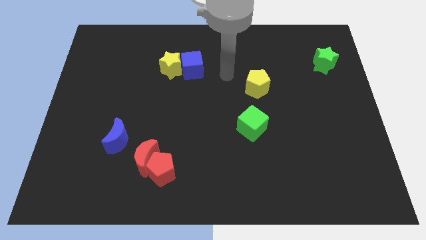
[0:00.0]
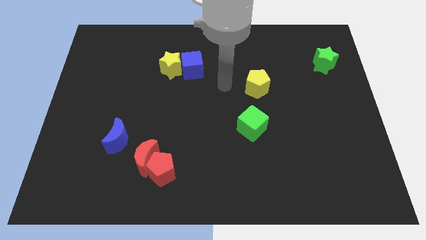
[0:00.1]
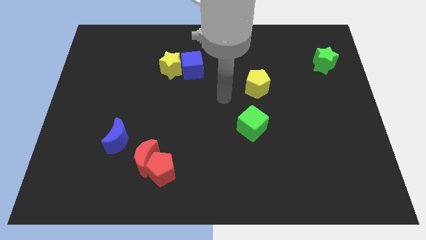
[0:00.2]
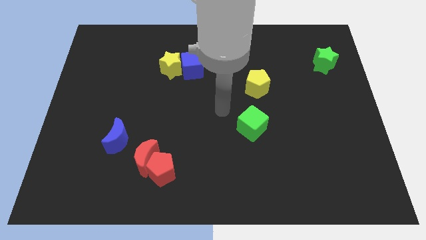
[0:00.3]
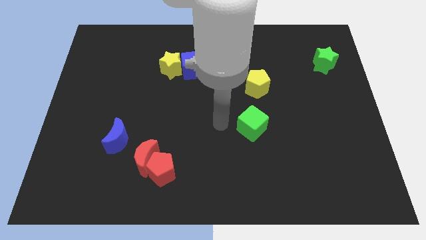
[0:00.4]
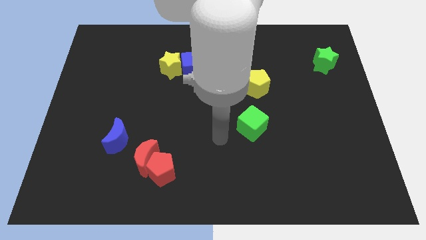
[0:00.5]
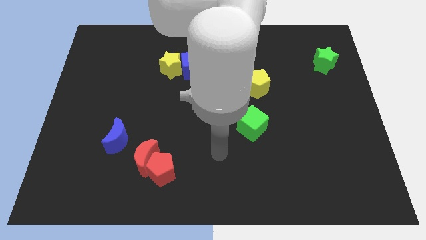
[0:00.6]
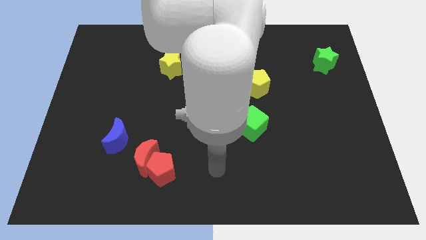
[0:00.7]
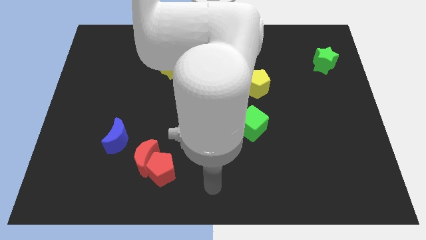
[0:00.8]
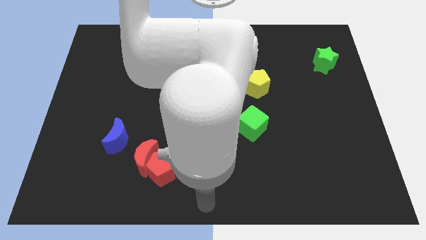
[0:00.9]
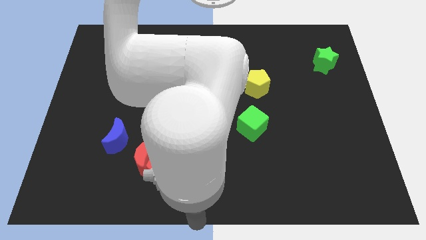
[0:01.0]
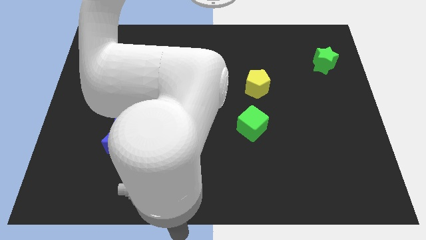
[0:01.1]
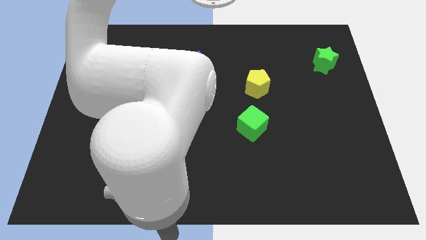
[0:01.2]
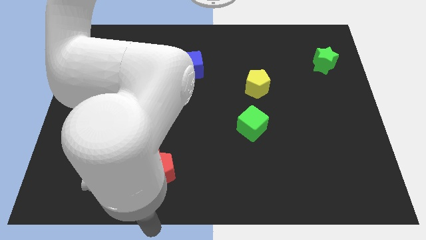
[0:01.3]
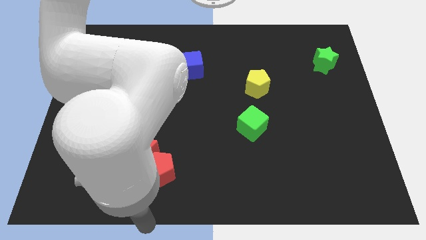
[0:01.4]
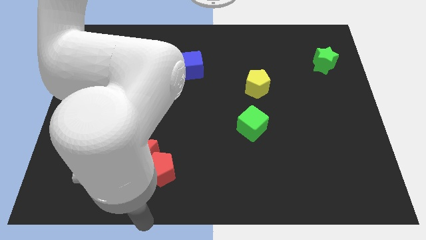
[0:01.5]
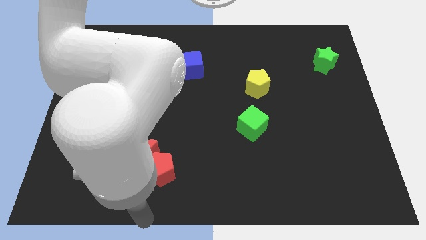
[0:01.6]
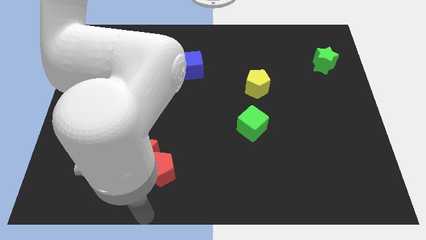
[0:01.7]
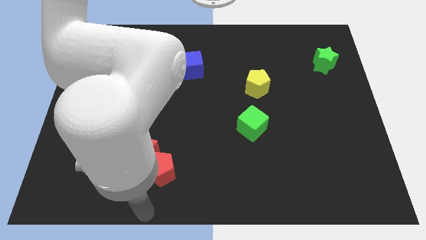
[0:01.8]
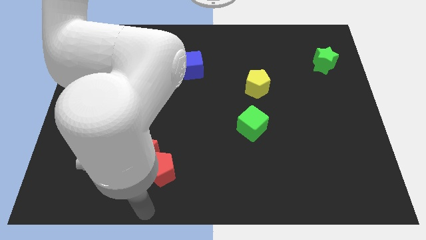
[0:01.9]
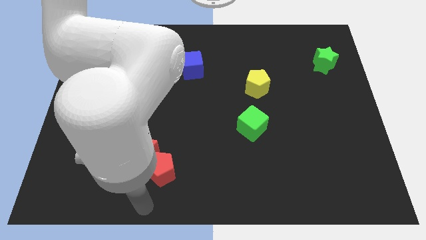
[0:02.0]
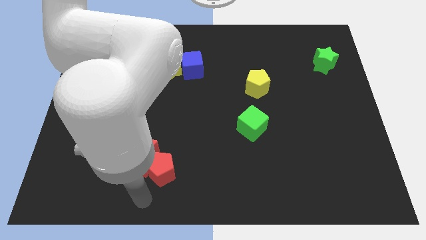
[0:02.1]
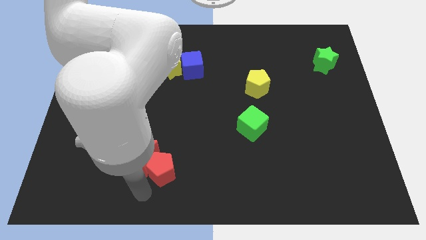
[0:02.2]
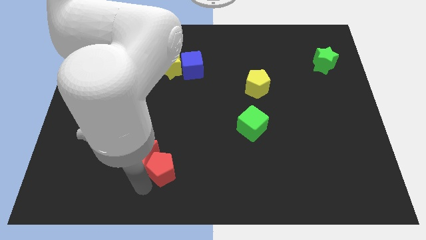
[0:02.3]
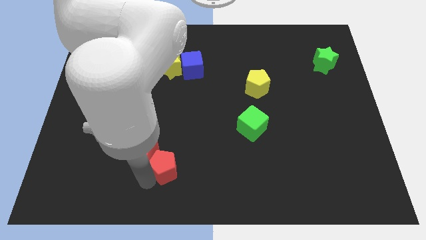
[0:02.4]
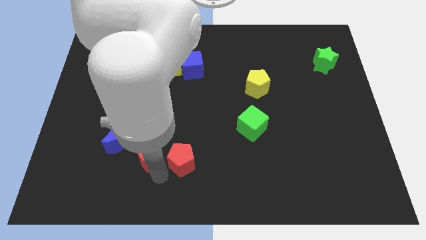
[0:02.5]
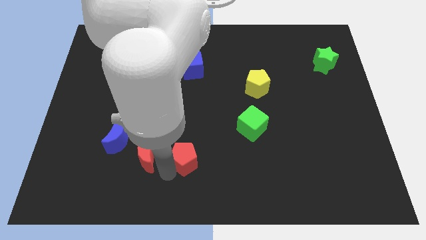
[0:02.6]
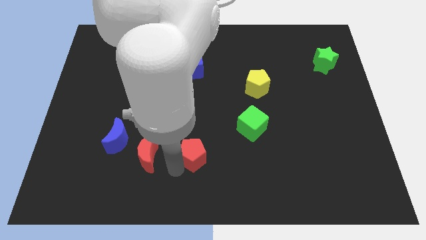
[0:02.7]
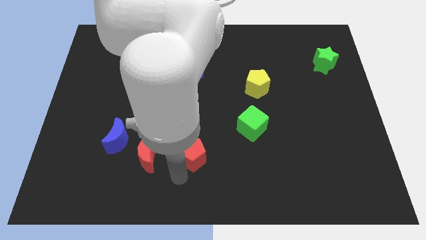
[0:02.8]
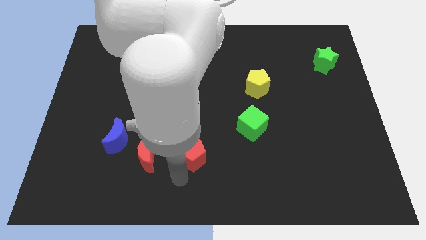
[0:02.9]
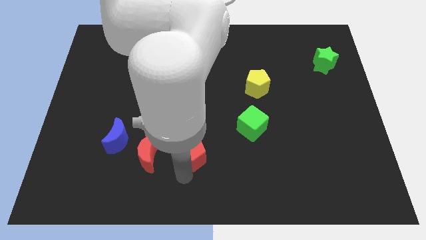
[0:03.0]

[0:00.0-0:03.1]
separate red pentagon from the red moon

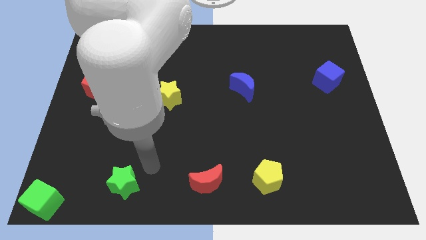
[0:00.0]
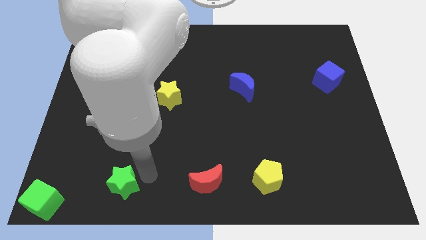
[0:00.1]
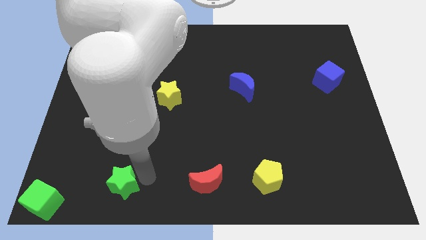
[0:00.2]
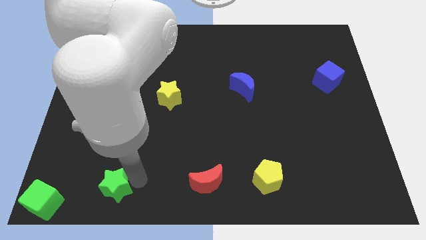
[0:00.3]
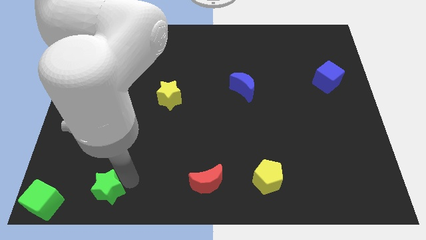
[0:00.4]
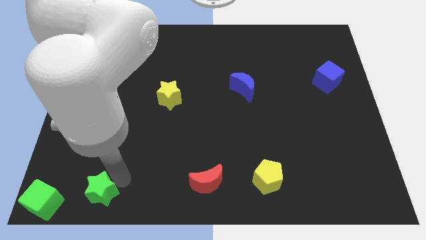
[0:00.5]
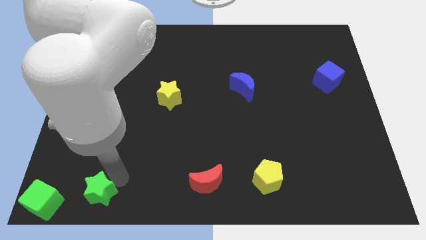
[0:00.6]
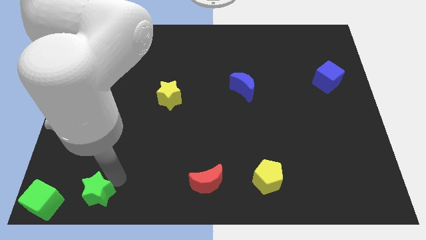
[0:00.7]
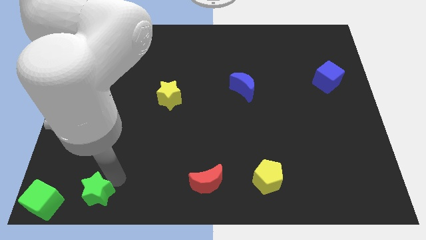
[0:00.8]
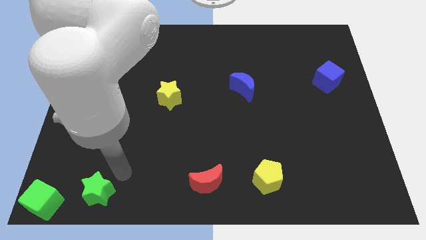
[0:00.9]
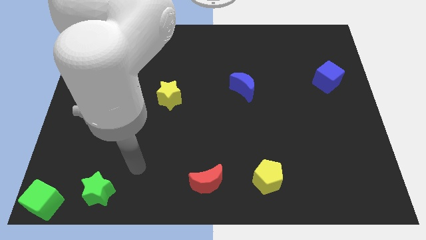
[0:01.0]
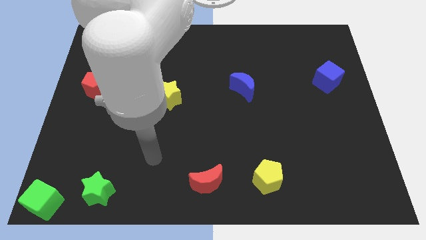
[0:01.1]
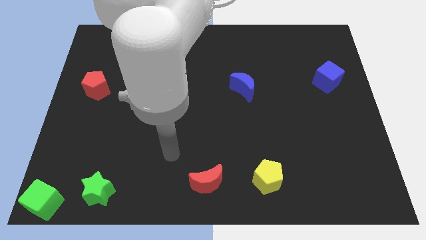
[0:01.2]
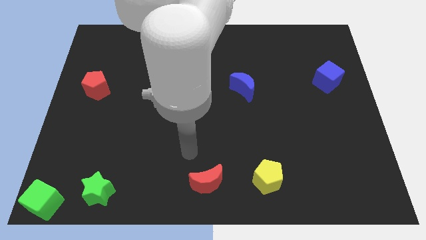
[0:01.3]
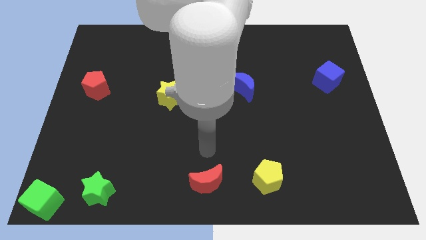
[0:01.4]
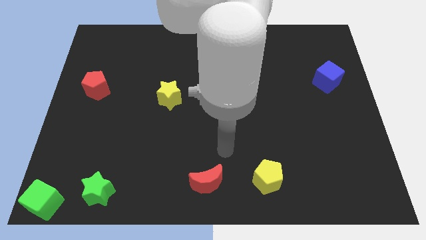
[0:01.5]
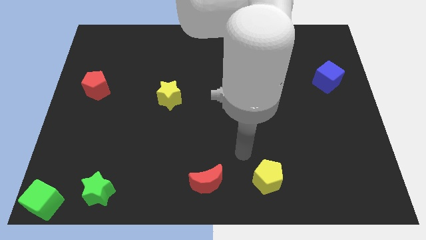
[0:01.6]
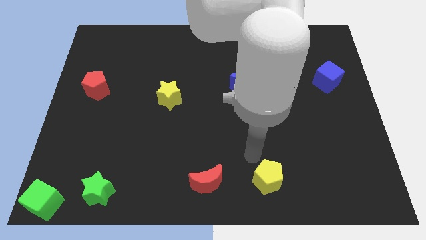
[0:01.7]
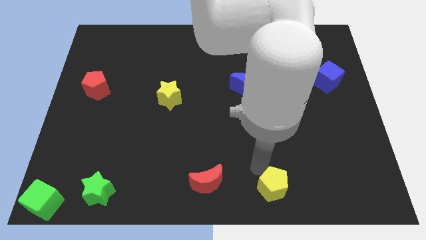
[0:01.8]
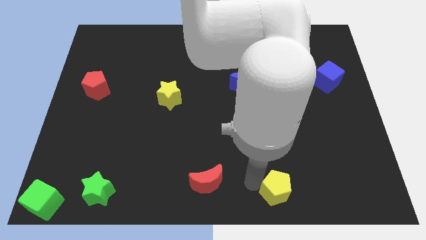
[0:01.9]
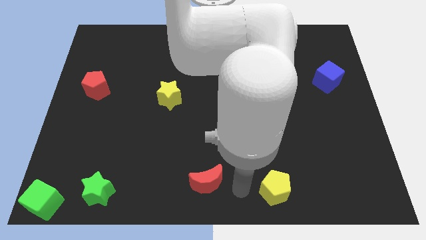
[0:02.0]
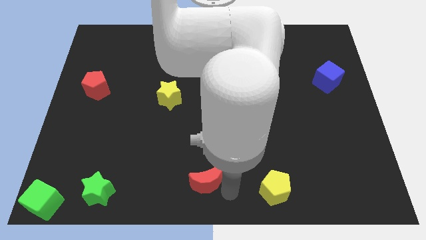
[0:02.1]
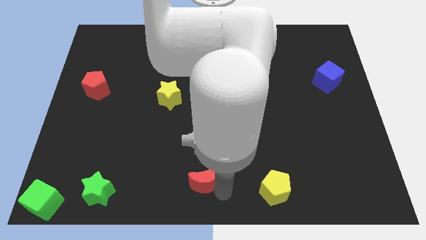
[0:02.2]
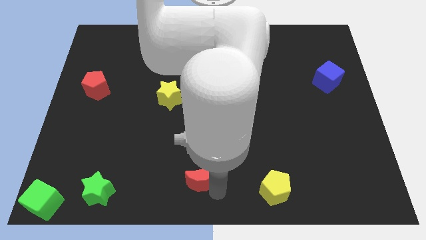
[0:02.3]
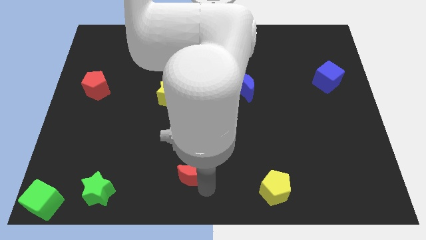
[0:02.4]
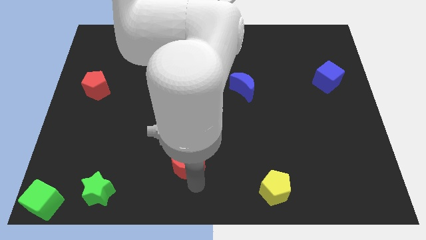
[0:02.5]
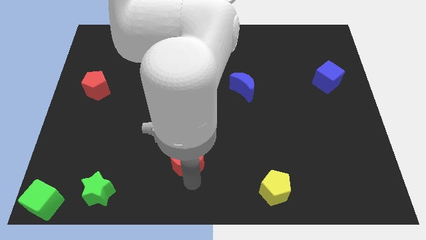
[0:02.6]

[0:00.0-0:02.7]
point your arm below red moon

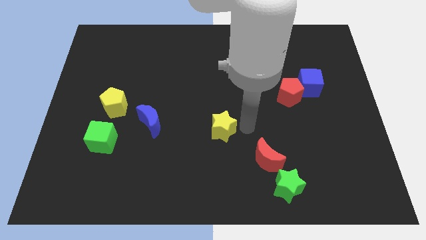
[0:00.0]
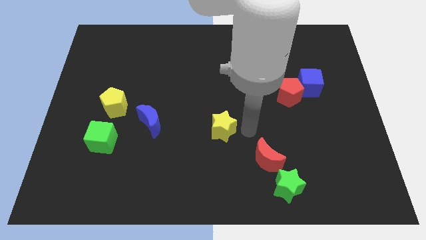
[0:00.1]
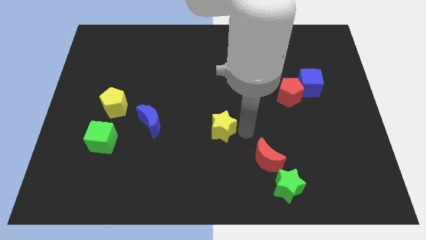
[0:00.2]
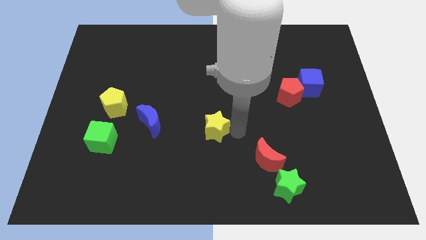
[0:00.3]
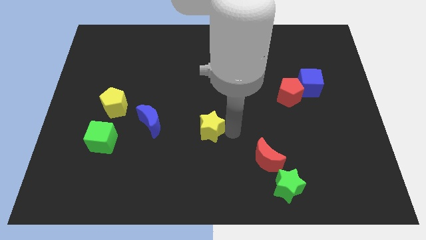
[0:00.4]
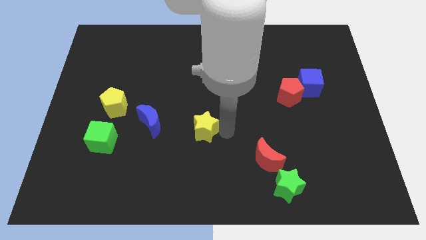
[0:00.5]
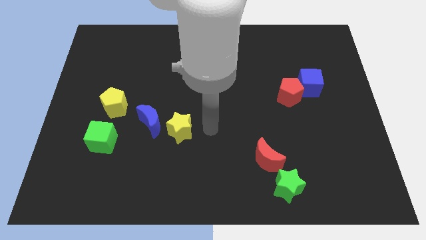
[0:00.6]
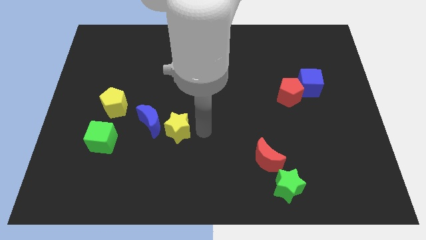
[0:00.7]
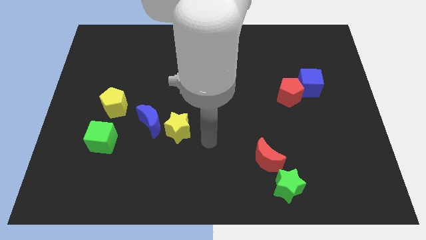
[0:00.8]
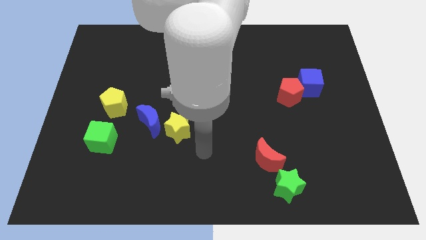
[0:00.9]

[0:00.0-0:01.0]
place the yellow star towards the right side of the blue crescent

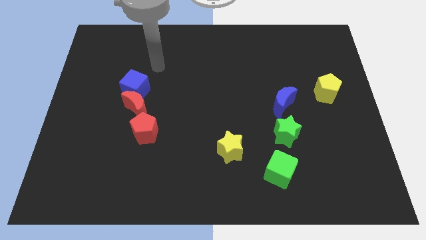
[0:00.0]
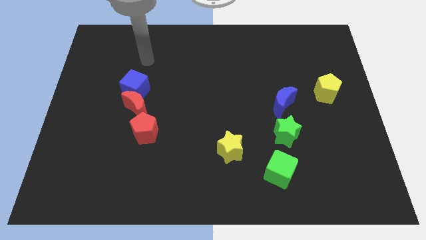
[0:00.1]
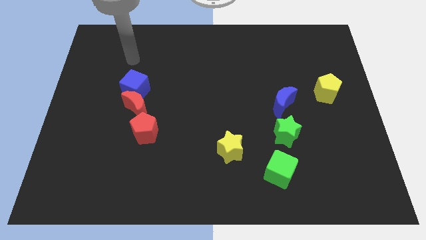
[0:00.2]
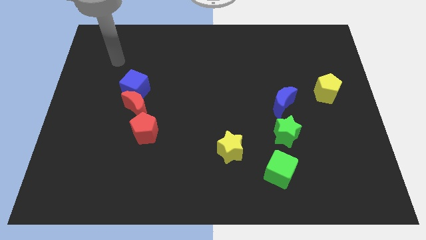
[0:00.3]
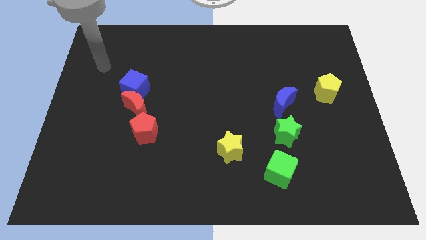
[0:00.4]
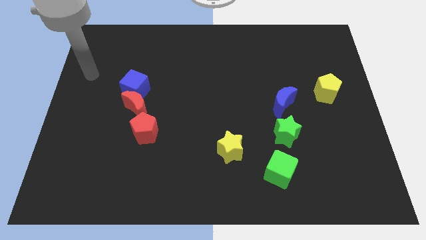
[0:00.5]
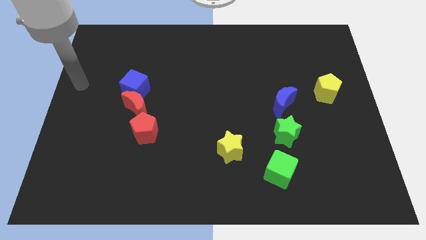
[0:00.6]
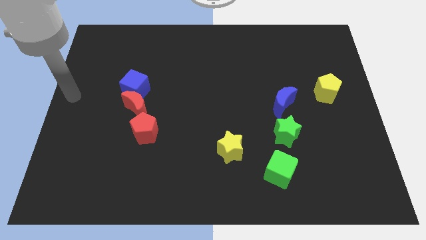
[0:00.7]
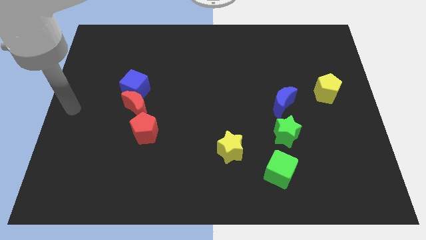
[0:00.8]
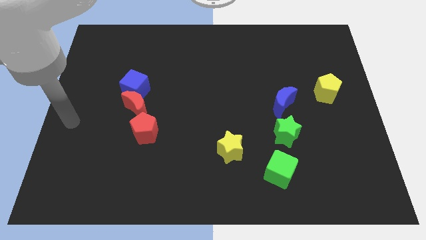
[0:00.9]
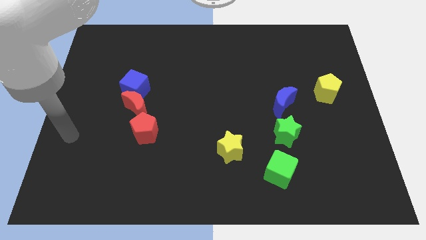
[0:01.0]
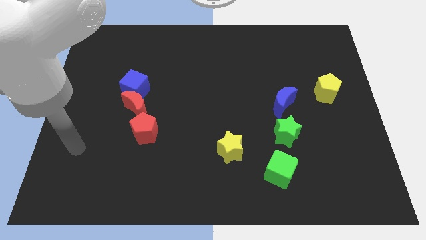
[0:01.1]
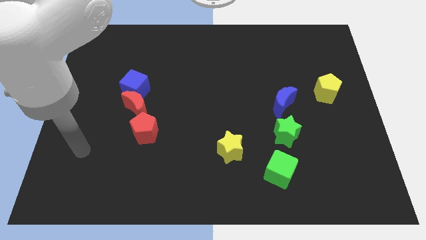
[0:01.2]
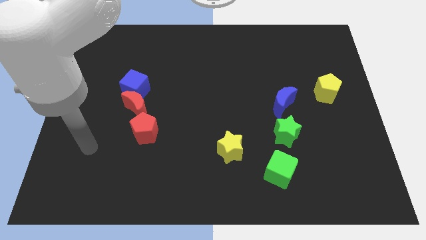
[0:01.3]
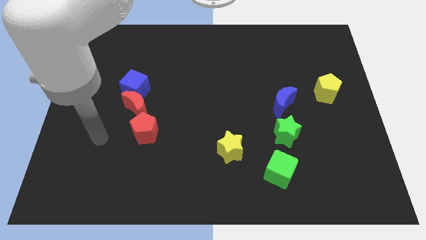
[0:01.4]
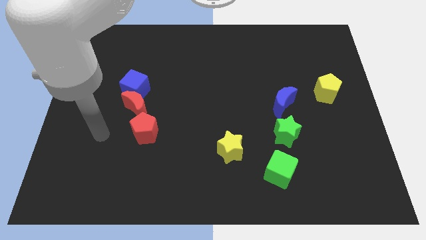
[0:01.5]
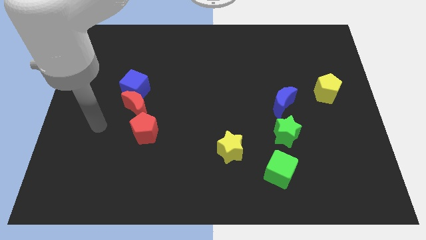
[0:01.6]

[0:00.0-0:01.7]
move your arm to the left of the red pentagon

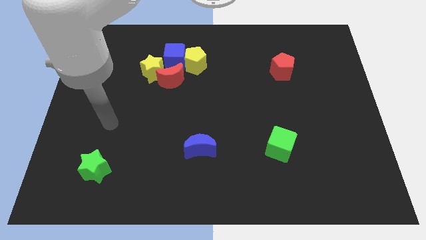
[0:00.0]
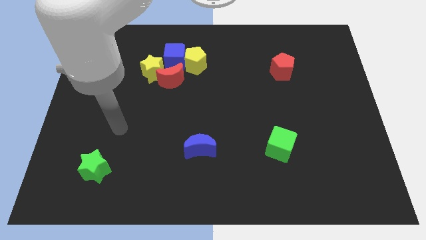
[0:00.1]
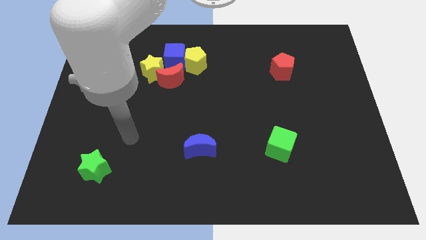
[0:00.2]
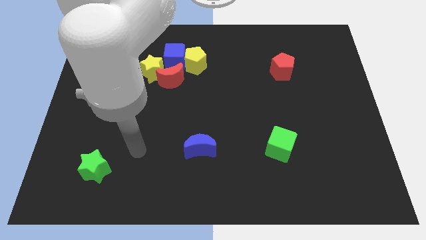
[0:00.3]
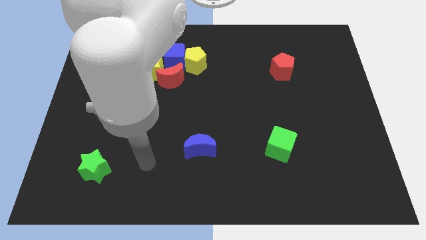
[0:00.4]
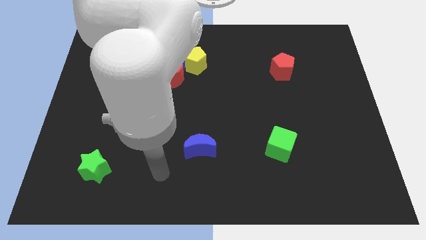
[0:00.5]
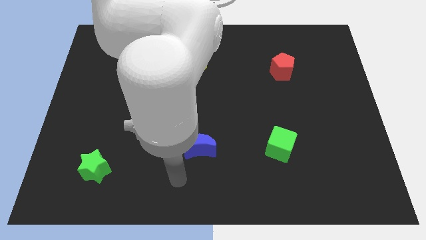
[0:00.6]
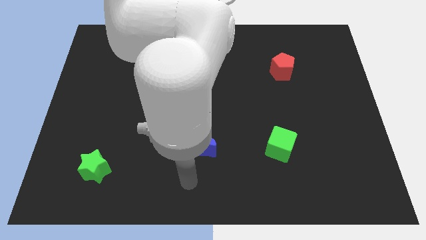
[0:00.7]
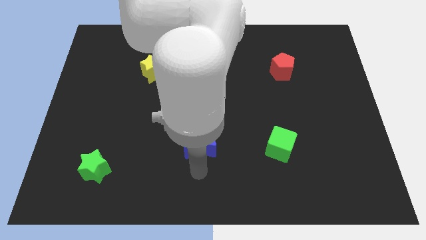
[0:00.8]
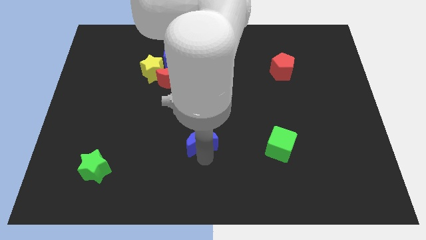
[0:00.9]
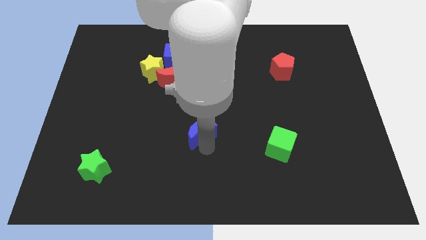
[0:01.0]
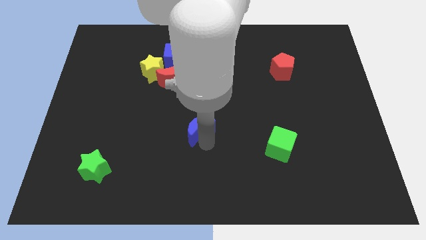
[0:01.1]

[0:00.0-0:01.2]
push the blue moon slightly up
